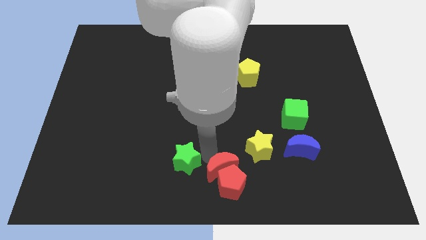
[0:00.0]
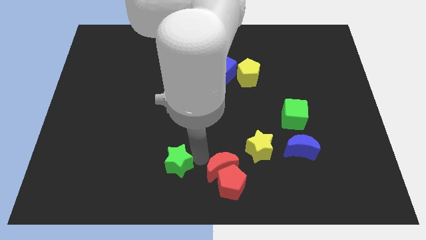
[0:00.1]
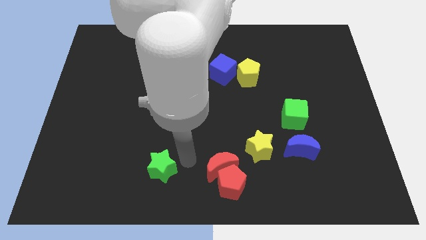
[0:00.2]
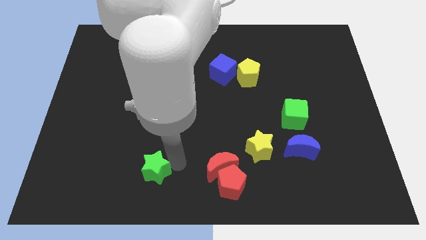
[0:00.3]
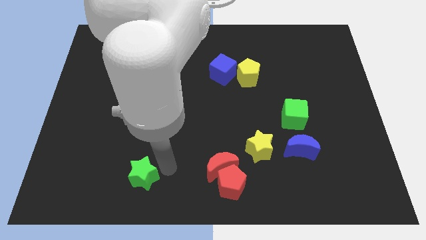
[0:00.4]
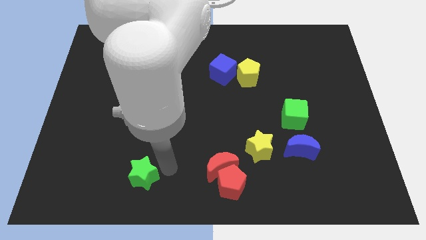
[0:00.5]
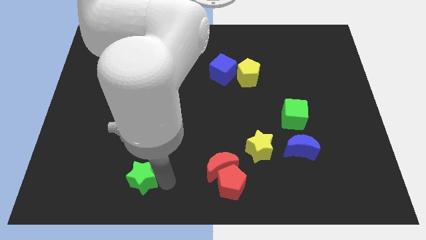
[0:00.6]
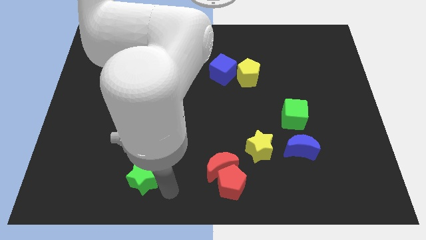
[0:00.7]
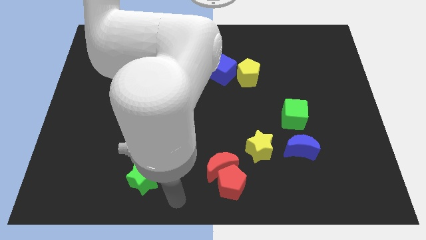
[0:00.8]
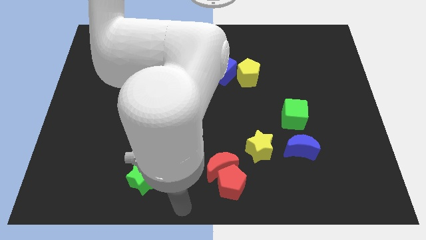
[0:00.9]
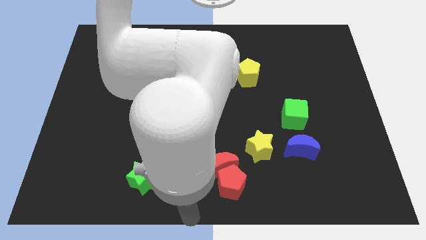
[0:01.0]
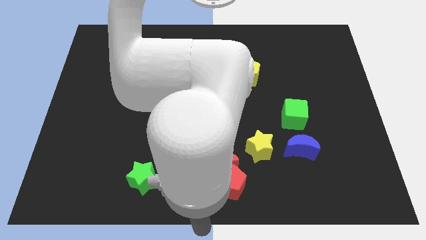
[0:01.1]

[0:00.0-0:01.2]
push the green star towards the bottom of the board

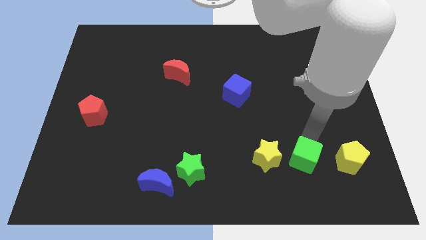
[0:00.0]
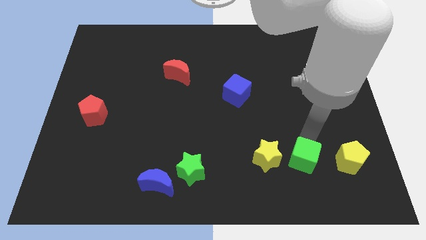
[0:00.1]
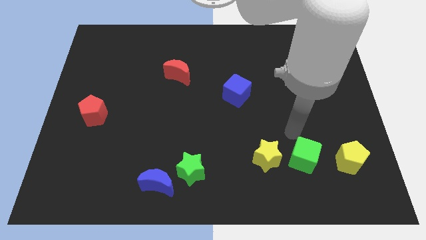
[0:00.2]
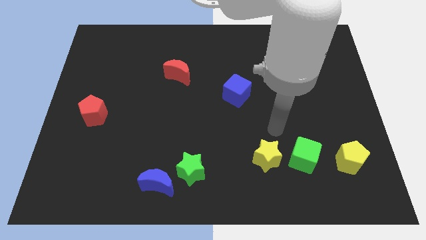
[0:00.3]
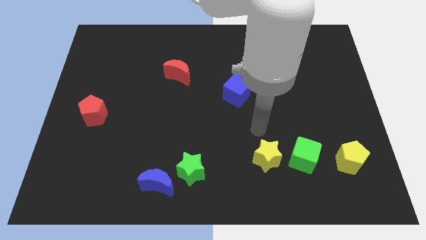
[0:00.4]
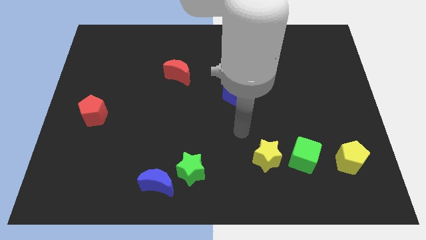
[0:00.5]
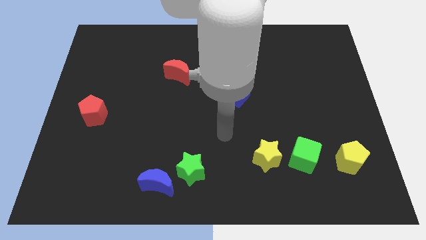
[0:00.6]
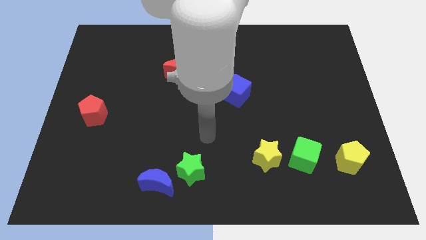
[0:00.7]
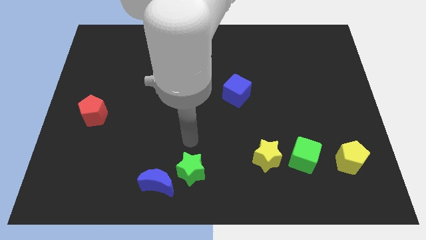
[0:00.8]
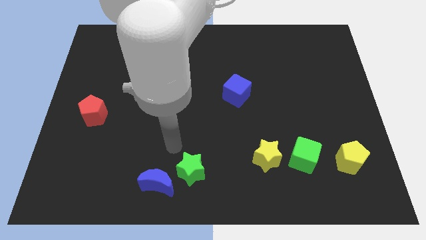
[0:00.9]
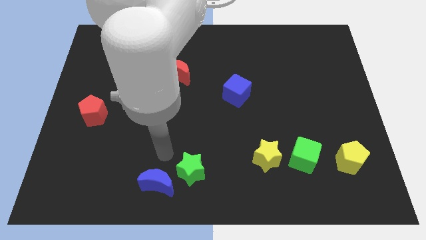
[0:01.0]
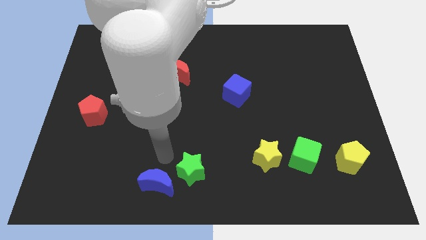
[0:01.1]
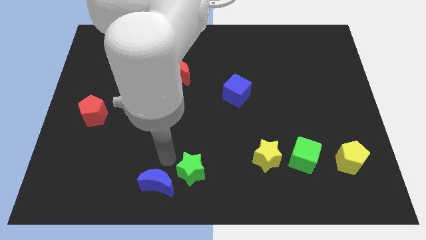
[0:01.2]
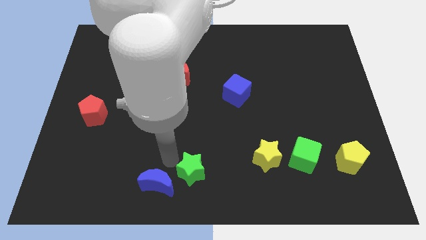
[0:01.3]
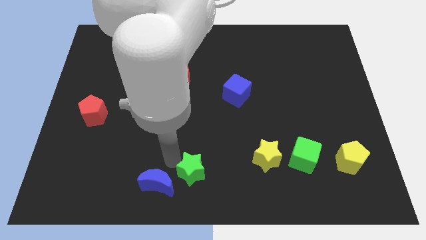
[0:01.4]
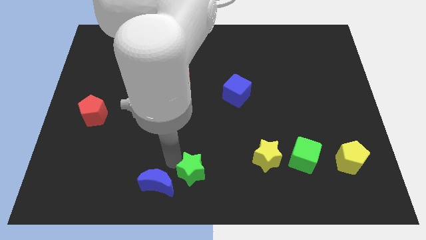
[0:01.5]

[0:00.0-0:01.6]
place your arm on top of the green star

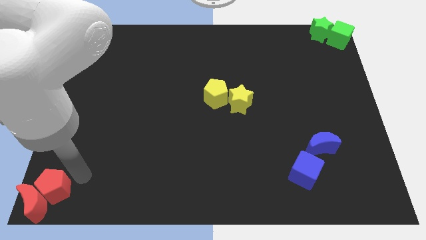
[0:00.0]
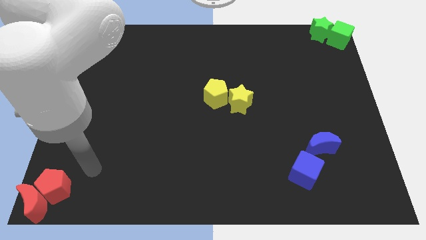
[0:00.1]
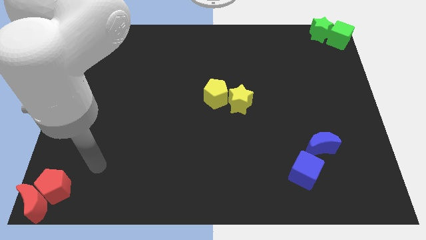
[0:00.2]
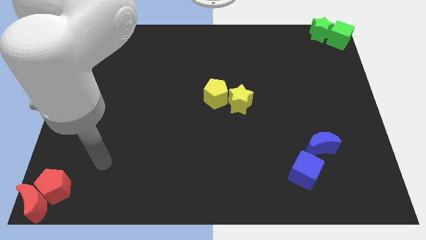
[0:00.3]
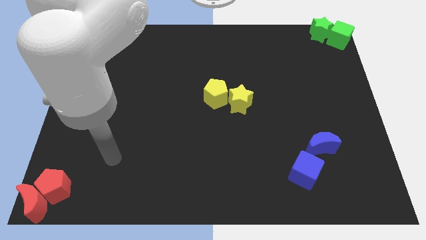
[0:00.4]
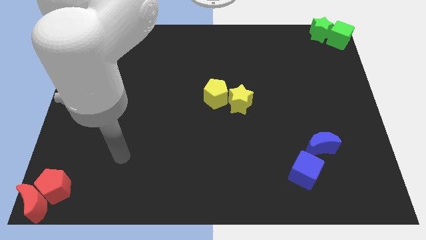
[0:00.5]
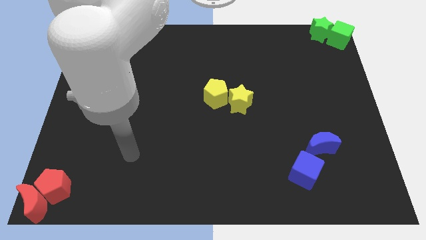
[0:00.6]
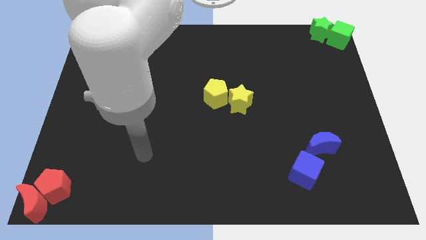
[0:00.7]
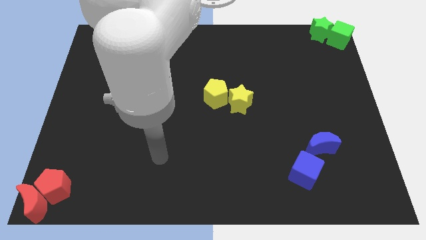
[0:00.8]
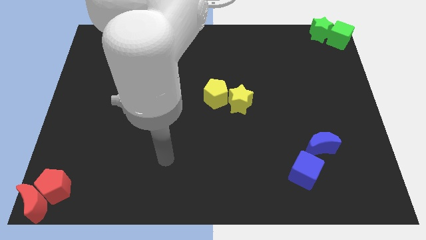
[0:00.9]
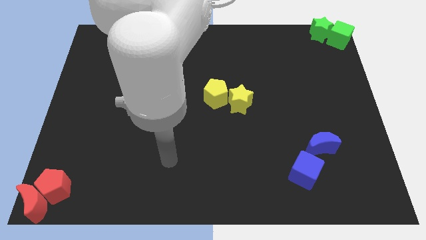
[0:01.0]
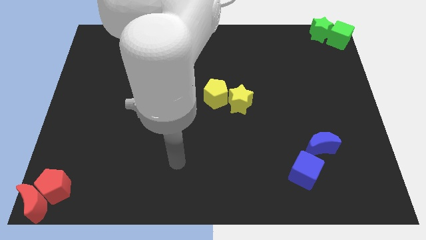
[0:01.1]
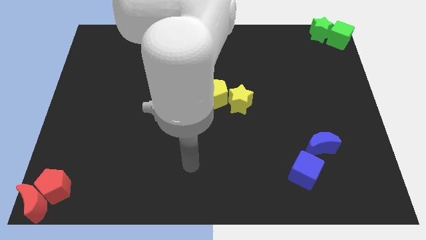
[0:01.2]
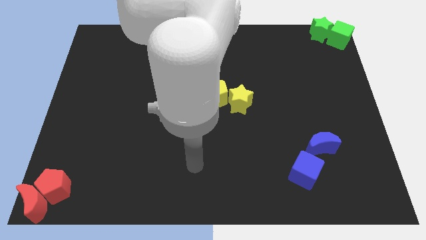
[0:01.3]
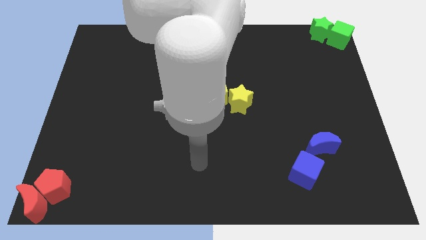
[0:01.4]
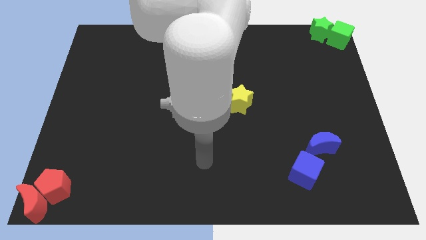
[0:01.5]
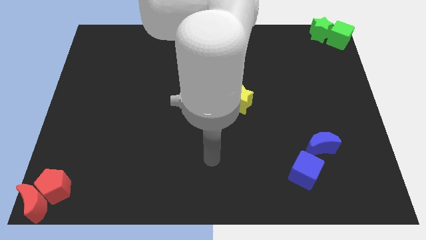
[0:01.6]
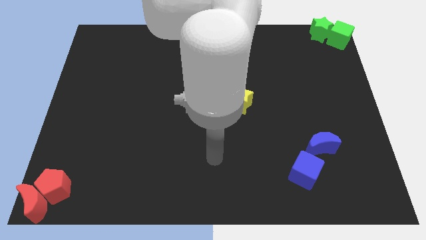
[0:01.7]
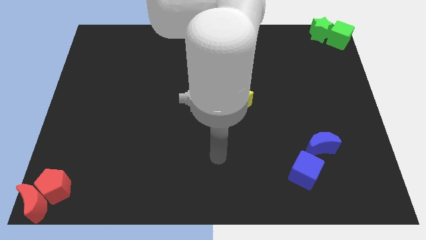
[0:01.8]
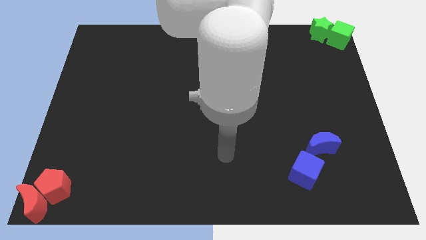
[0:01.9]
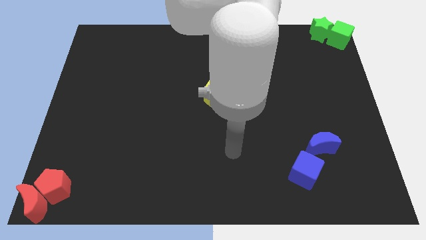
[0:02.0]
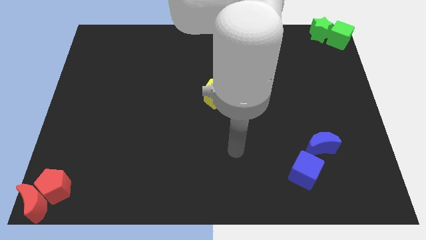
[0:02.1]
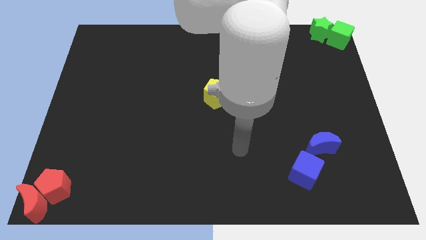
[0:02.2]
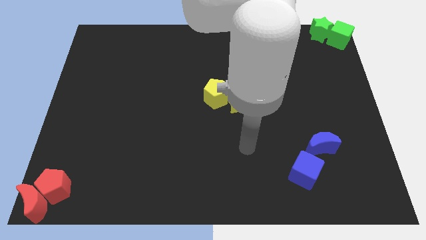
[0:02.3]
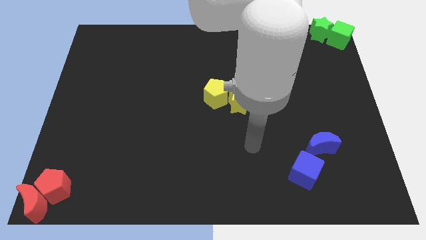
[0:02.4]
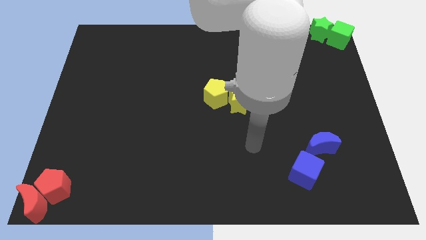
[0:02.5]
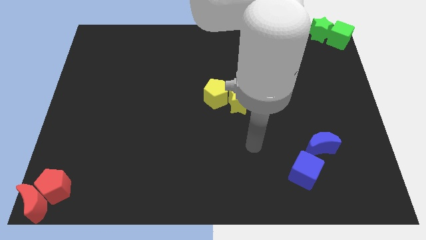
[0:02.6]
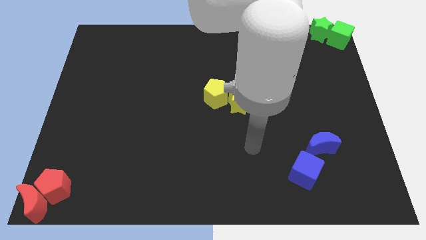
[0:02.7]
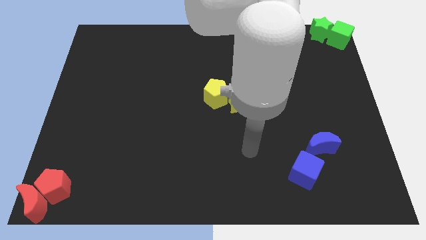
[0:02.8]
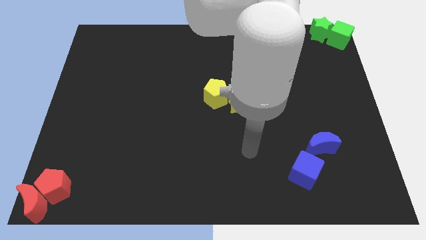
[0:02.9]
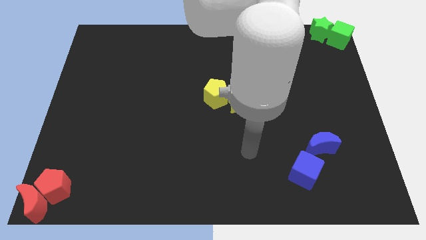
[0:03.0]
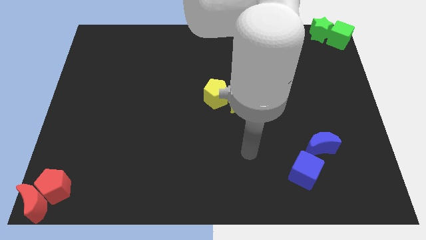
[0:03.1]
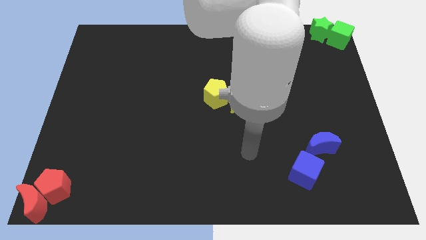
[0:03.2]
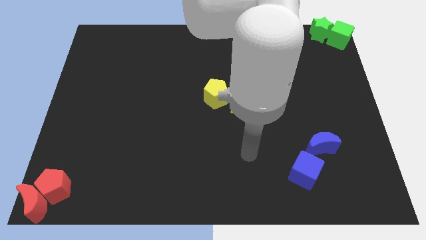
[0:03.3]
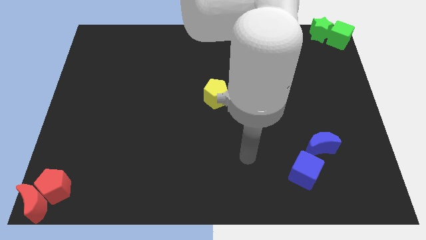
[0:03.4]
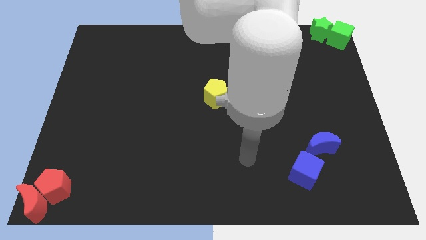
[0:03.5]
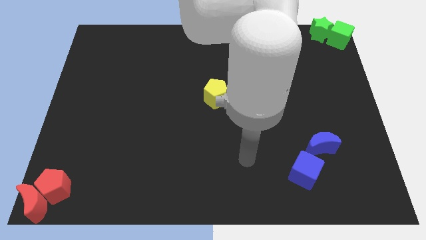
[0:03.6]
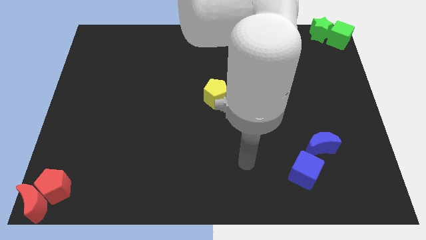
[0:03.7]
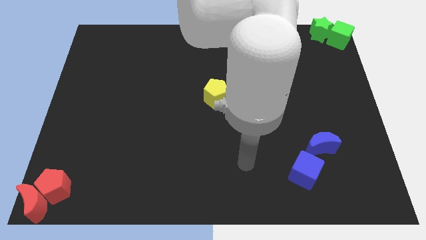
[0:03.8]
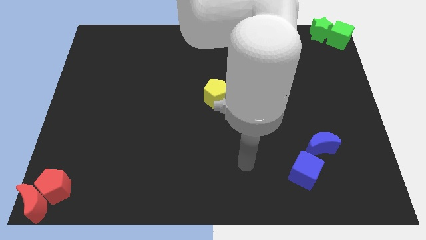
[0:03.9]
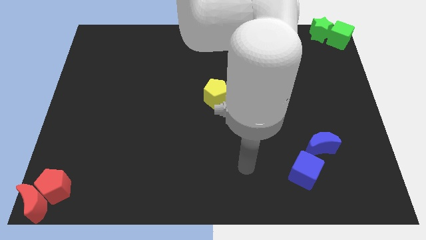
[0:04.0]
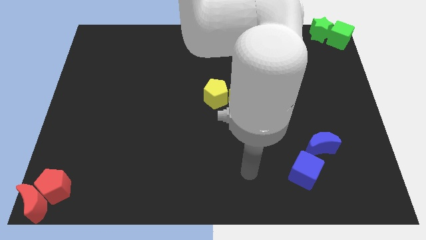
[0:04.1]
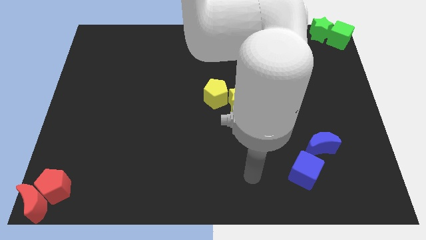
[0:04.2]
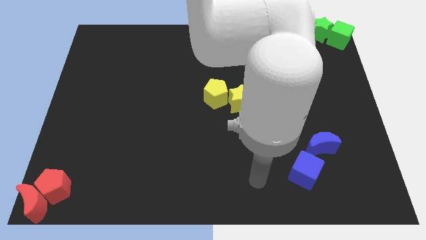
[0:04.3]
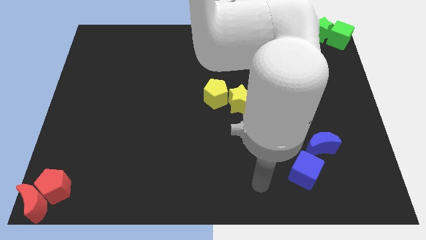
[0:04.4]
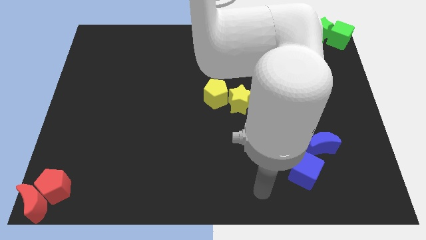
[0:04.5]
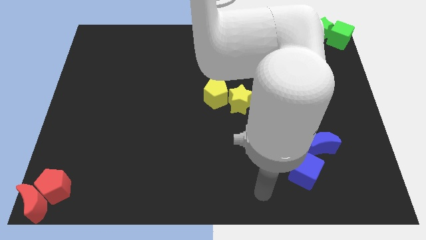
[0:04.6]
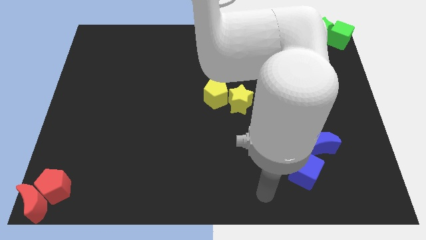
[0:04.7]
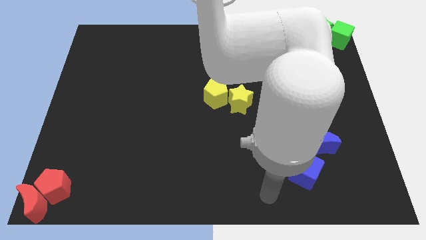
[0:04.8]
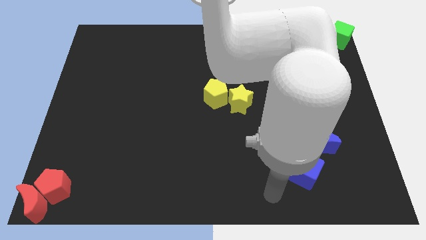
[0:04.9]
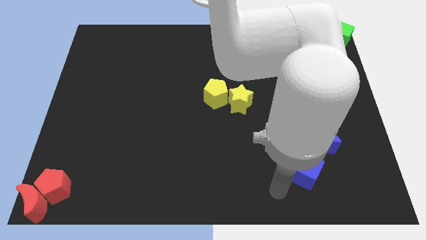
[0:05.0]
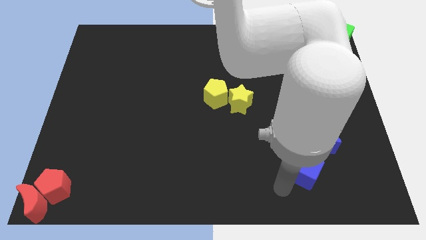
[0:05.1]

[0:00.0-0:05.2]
go near the blue cube

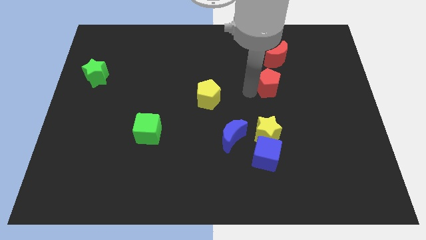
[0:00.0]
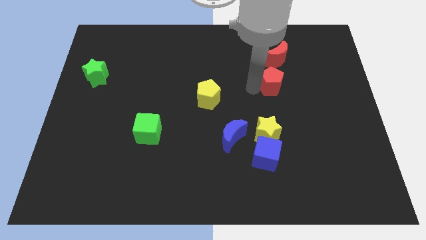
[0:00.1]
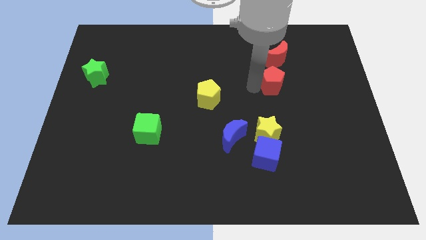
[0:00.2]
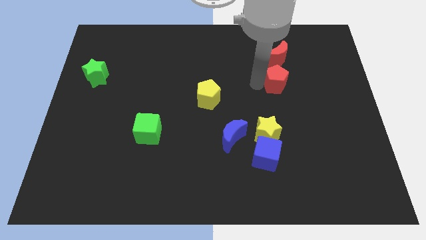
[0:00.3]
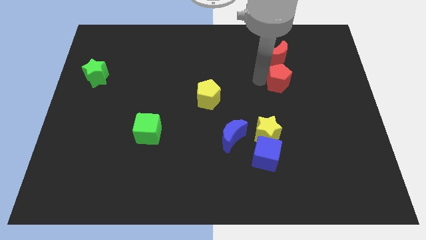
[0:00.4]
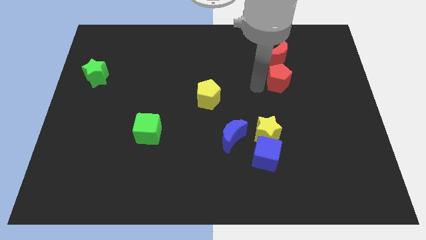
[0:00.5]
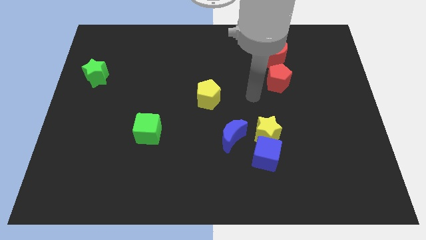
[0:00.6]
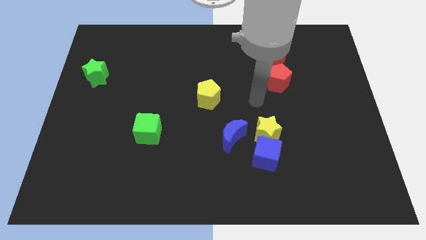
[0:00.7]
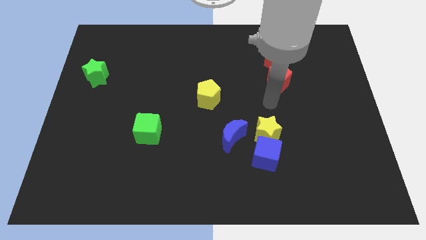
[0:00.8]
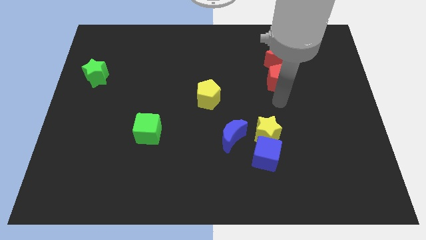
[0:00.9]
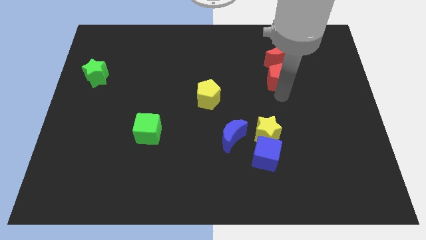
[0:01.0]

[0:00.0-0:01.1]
push red pentagon towards red moon
